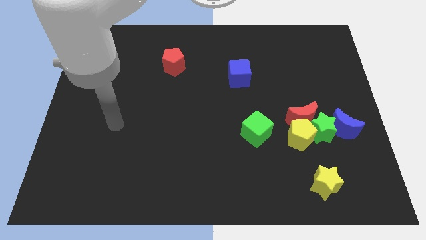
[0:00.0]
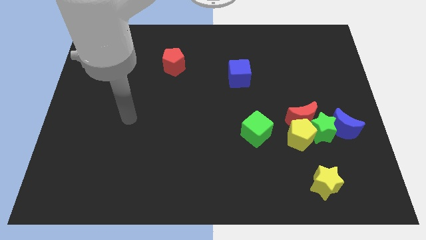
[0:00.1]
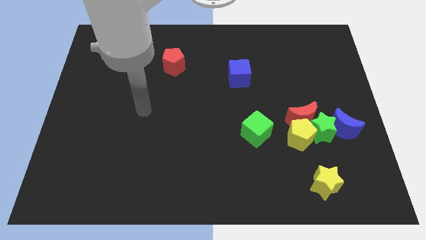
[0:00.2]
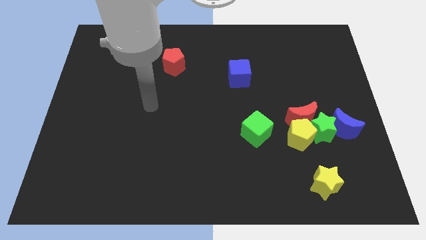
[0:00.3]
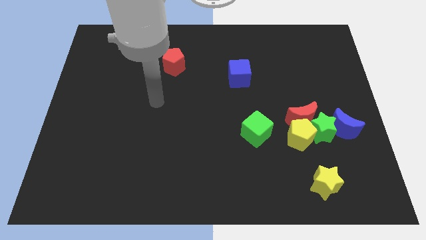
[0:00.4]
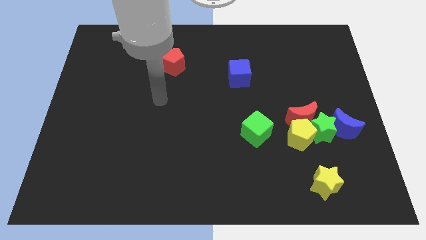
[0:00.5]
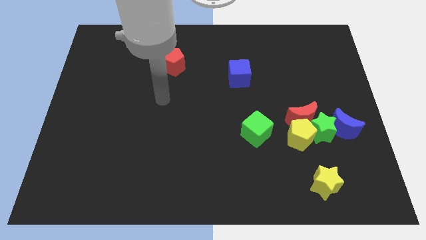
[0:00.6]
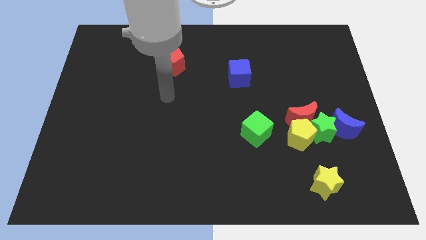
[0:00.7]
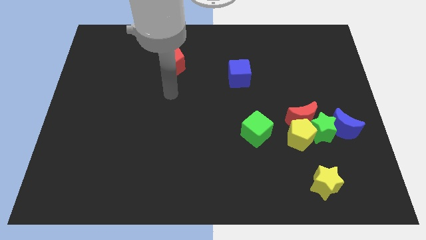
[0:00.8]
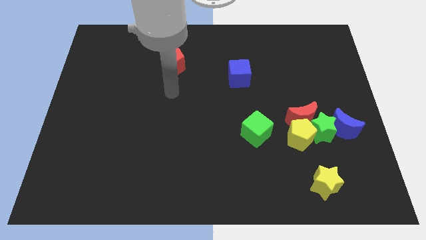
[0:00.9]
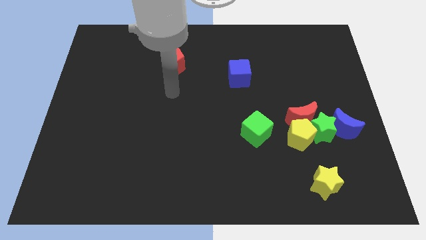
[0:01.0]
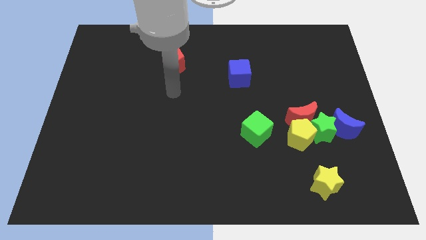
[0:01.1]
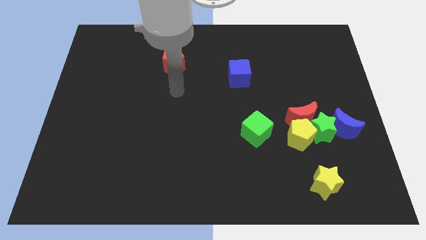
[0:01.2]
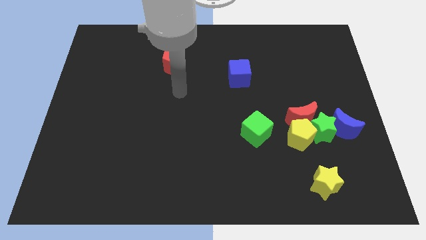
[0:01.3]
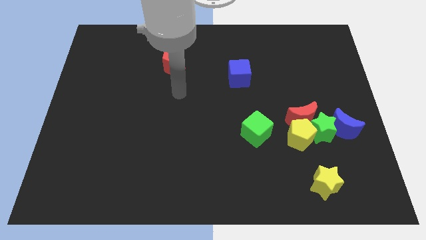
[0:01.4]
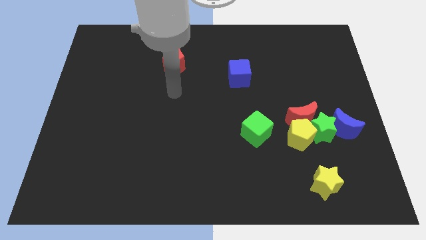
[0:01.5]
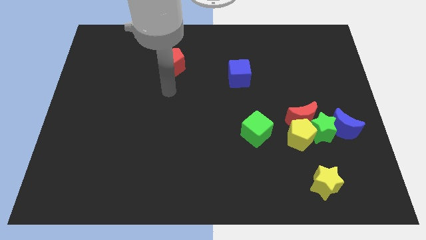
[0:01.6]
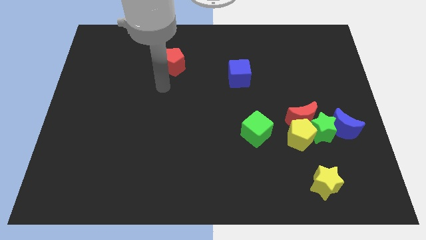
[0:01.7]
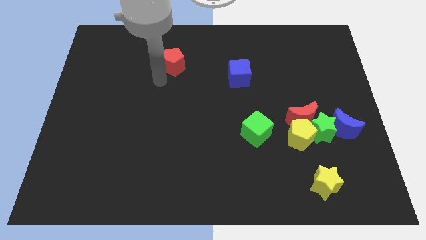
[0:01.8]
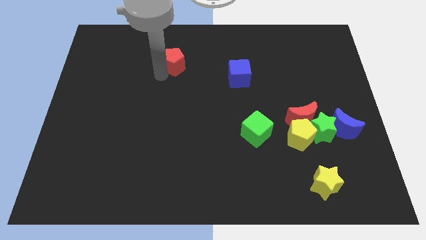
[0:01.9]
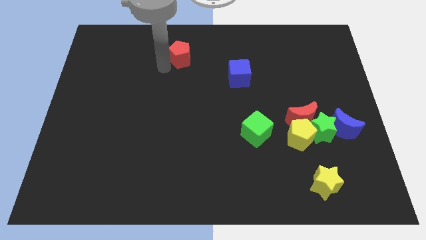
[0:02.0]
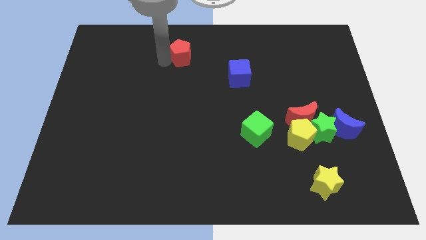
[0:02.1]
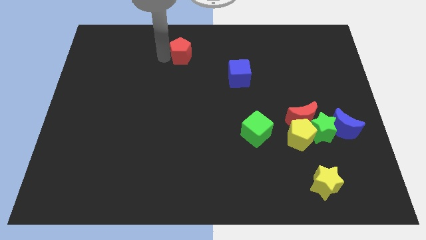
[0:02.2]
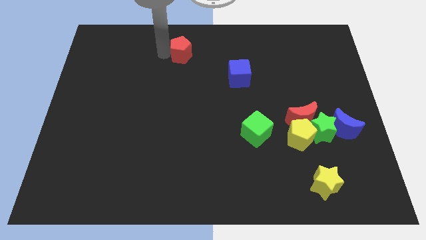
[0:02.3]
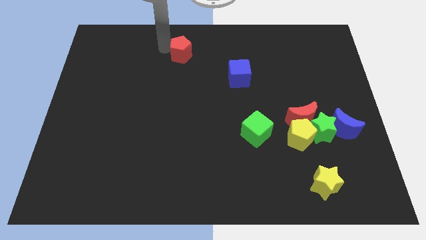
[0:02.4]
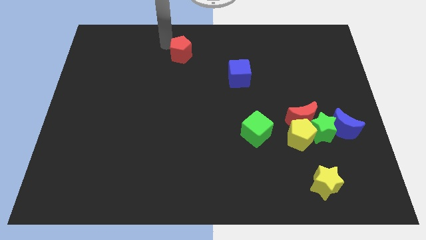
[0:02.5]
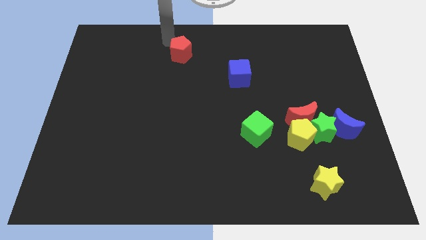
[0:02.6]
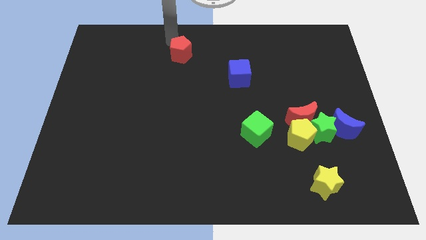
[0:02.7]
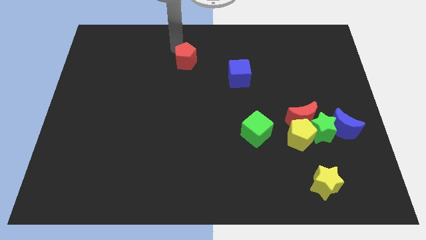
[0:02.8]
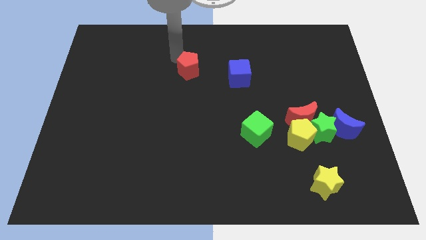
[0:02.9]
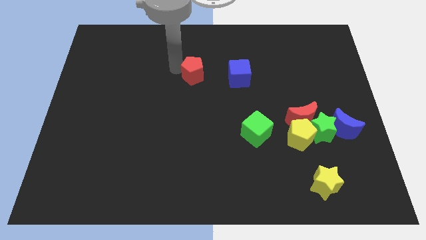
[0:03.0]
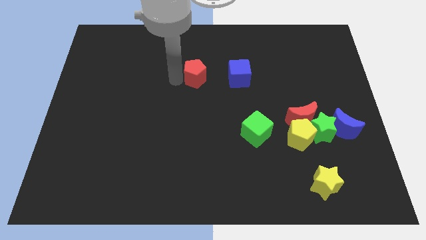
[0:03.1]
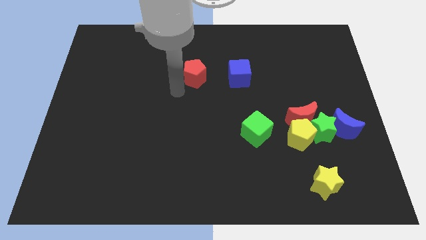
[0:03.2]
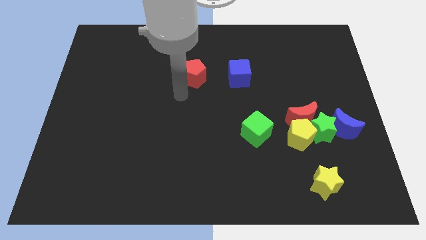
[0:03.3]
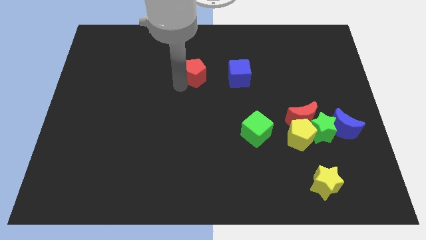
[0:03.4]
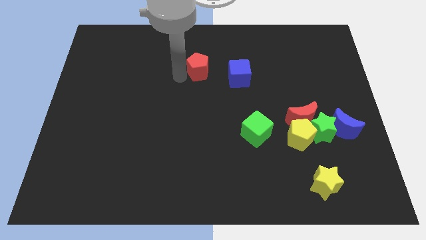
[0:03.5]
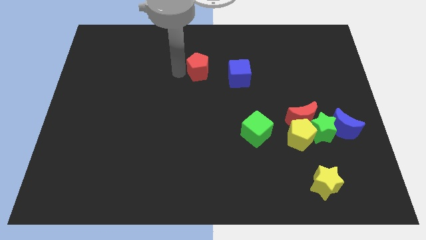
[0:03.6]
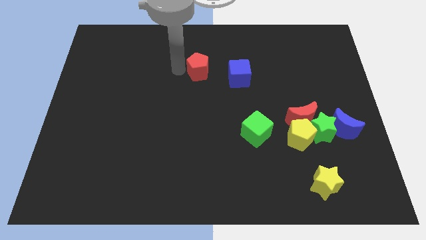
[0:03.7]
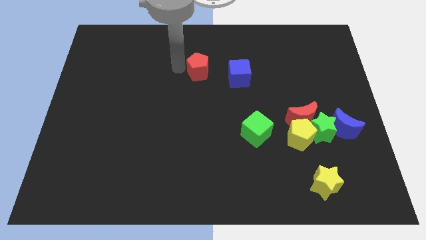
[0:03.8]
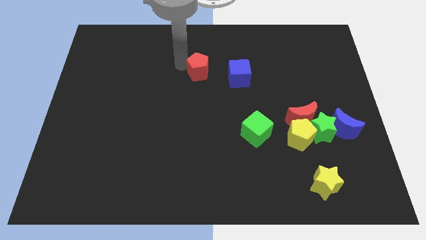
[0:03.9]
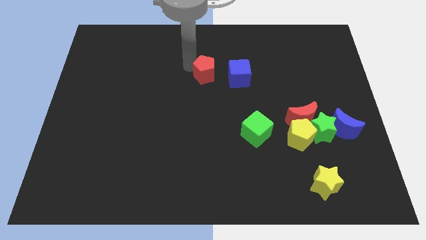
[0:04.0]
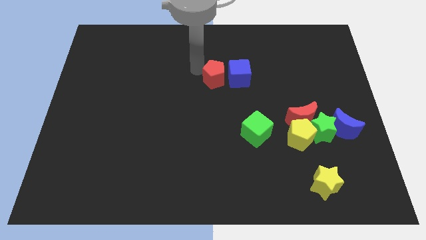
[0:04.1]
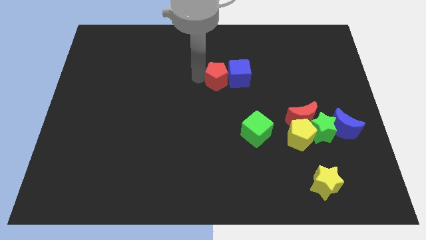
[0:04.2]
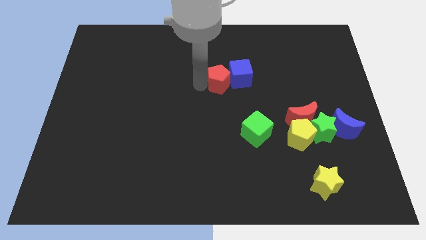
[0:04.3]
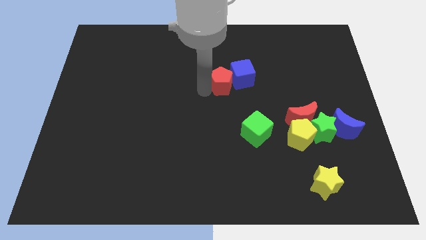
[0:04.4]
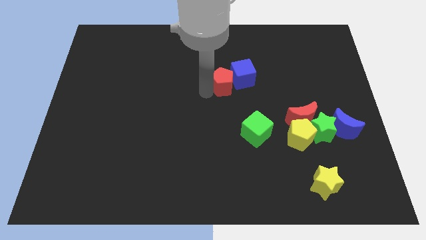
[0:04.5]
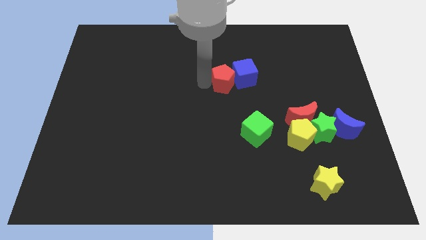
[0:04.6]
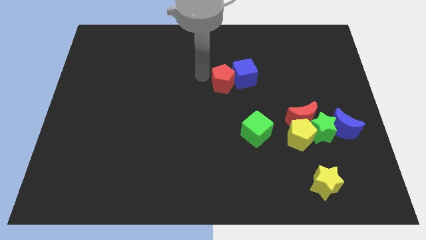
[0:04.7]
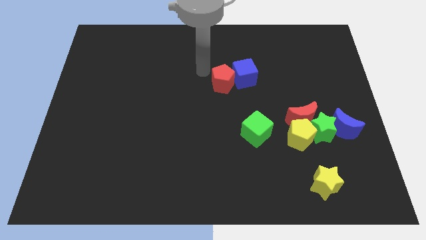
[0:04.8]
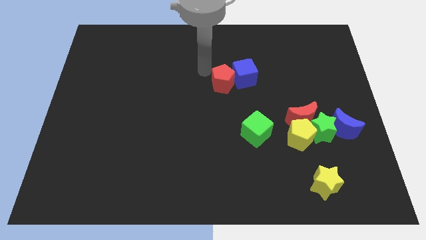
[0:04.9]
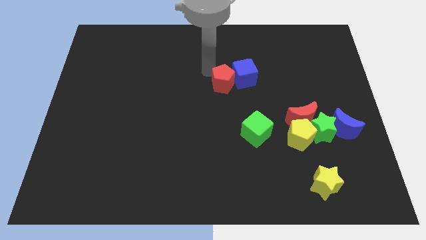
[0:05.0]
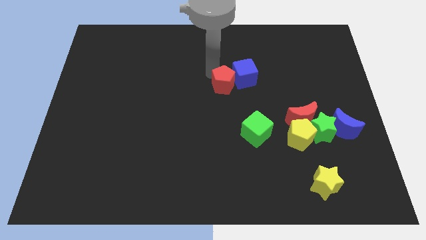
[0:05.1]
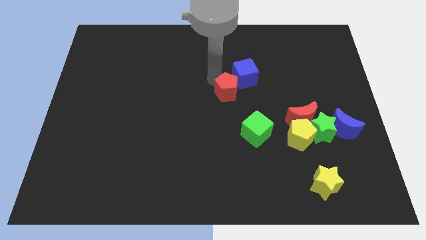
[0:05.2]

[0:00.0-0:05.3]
move the red pentagon to the bottom left beside the blue cube

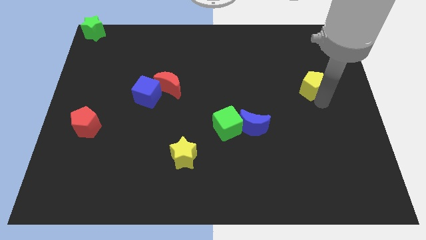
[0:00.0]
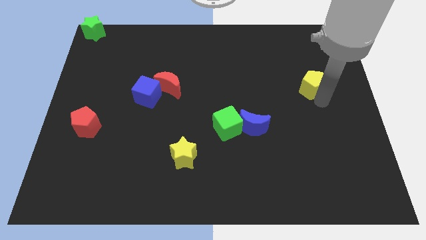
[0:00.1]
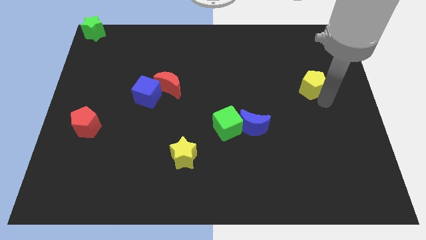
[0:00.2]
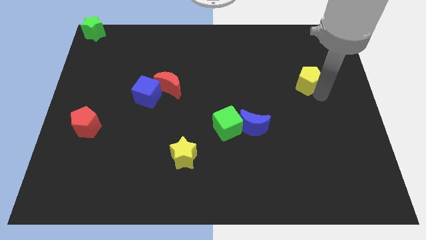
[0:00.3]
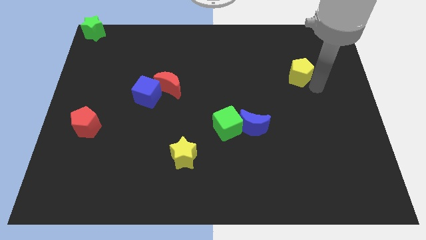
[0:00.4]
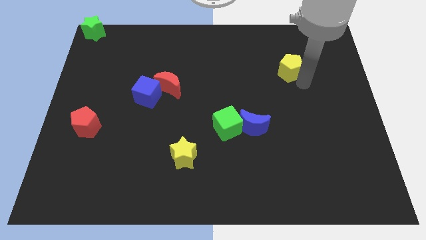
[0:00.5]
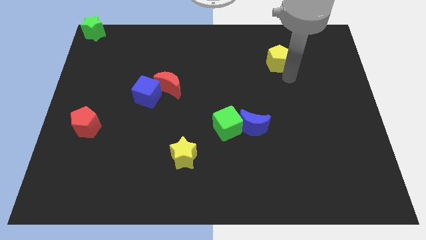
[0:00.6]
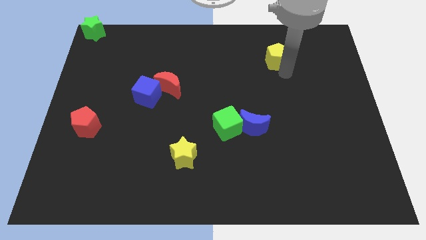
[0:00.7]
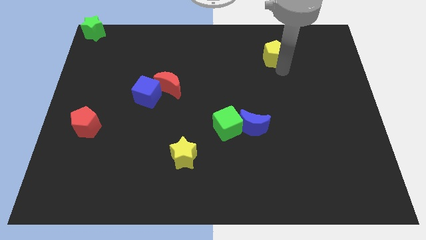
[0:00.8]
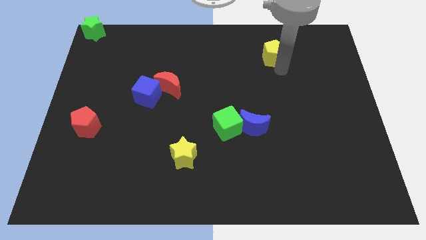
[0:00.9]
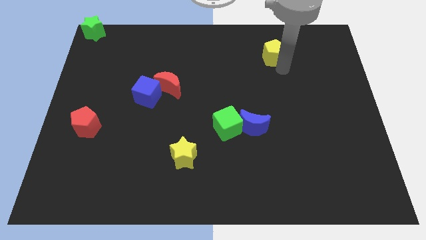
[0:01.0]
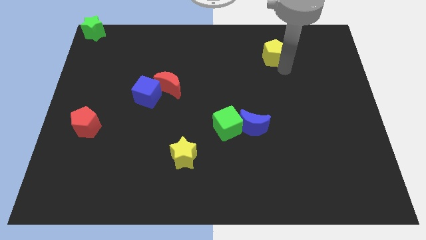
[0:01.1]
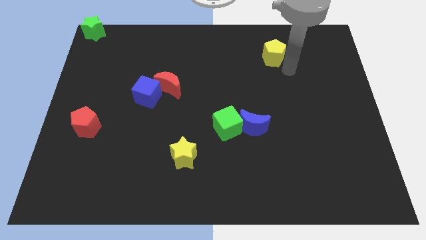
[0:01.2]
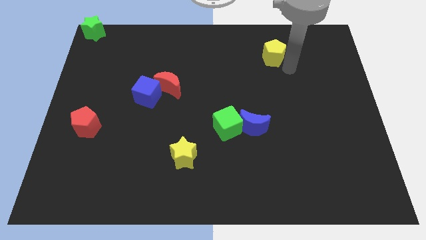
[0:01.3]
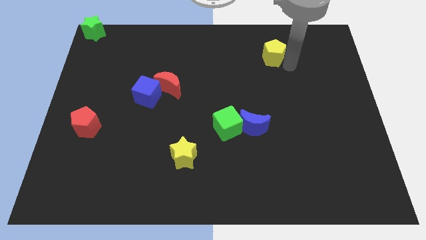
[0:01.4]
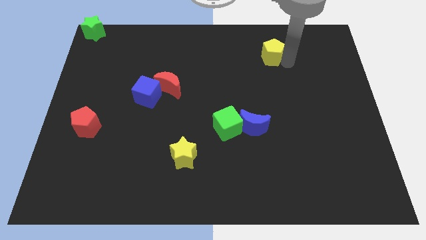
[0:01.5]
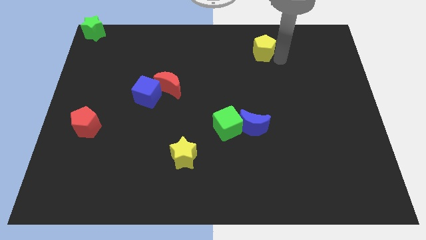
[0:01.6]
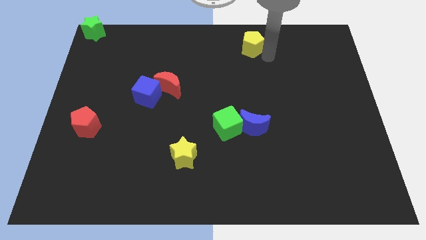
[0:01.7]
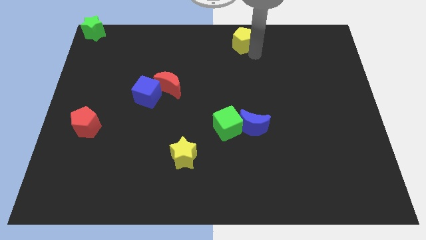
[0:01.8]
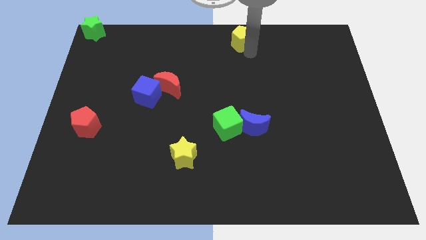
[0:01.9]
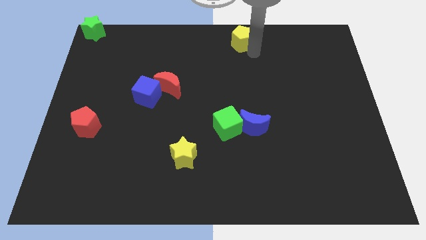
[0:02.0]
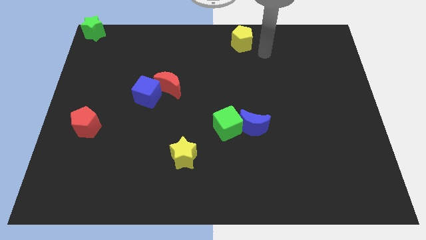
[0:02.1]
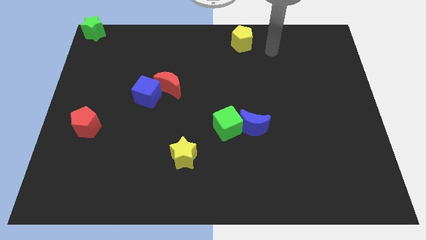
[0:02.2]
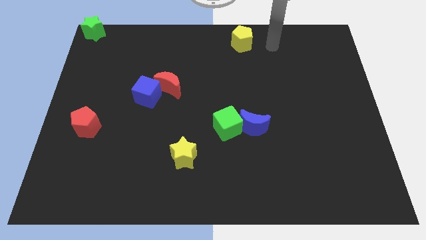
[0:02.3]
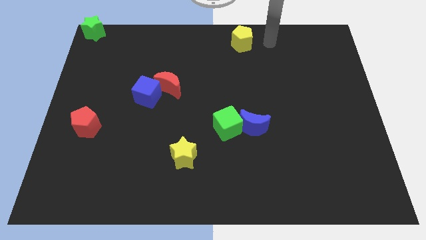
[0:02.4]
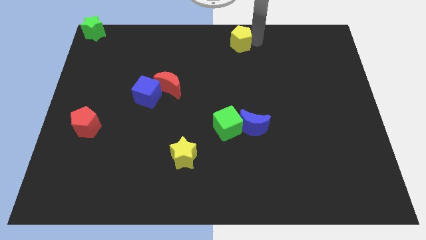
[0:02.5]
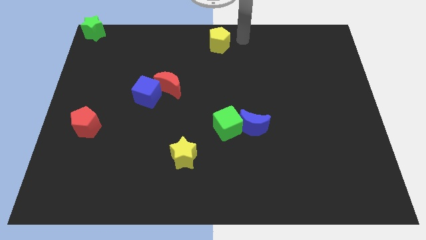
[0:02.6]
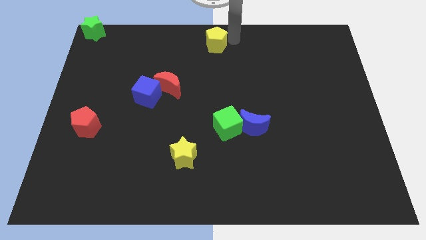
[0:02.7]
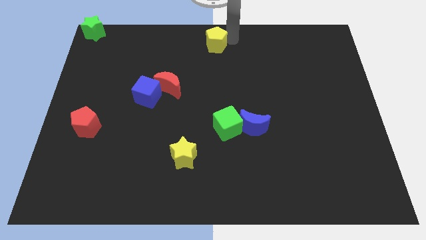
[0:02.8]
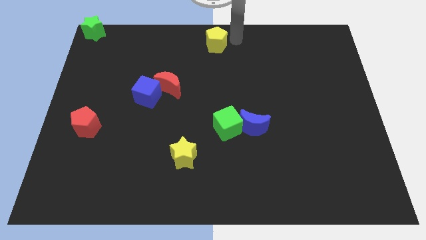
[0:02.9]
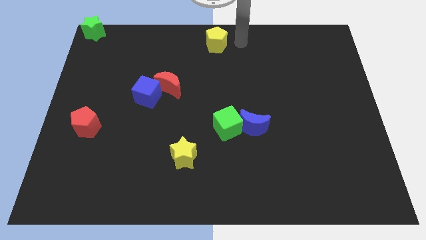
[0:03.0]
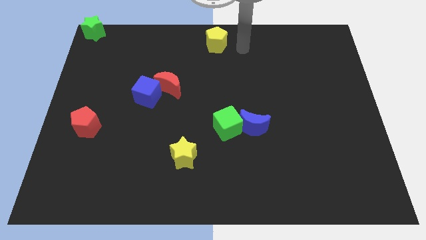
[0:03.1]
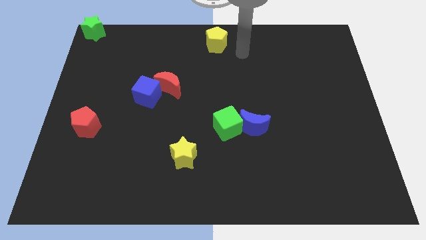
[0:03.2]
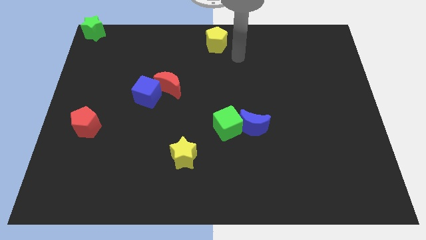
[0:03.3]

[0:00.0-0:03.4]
put the yellow pentagon at the top center of the board

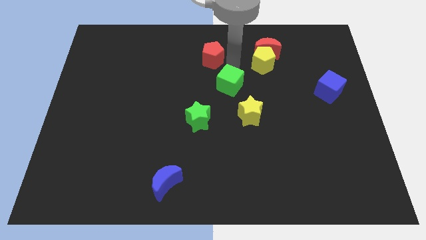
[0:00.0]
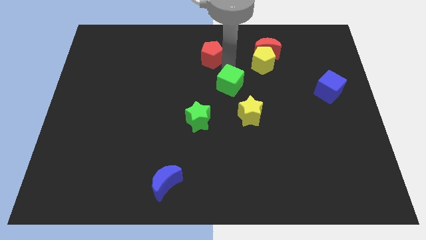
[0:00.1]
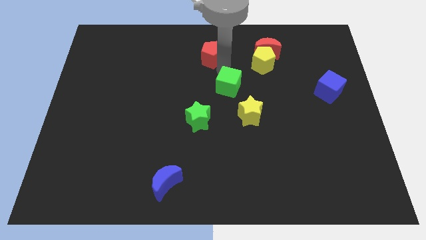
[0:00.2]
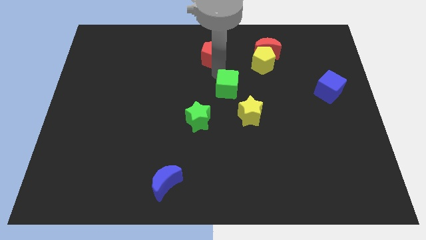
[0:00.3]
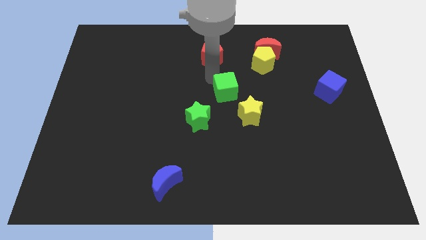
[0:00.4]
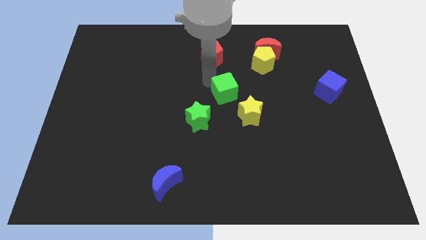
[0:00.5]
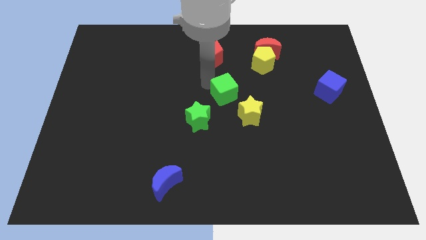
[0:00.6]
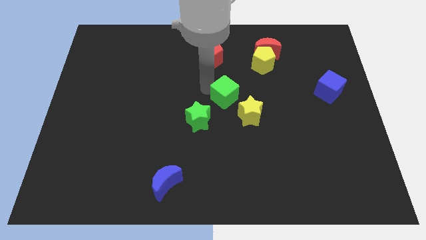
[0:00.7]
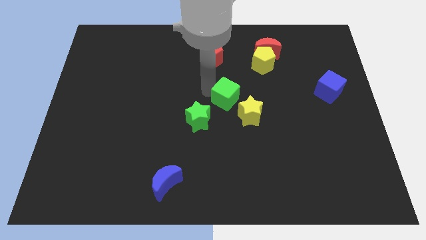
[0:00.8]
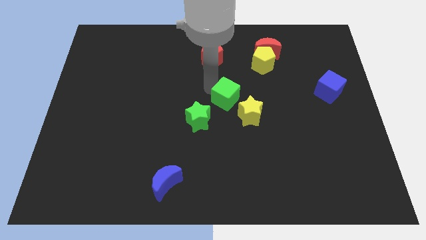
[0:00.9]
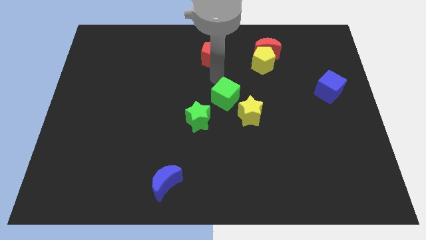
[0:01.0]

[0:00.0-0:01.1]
push green cube slightly towards down
